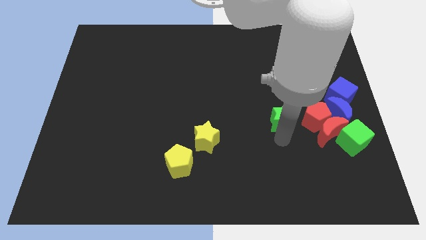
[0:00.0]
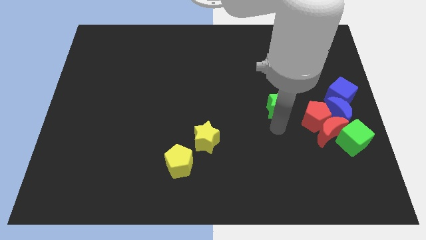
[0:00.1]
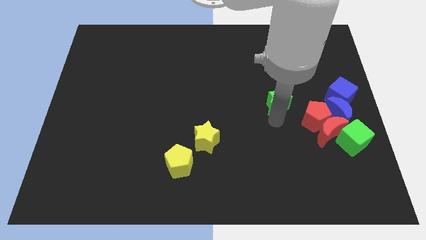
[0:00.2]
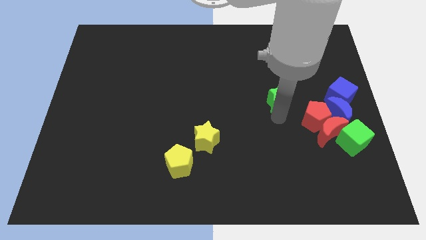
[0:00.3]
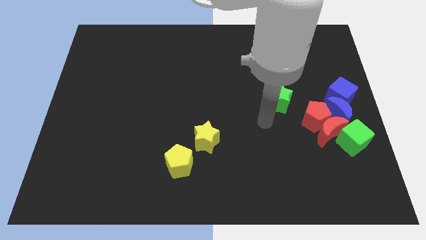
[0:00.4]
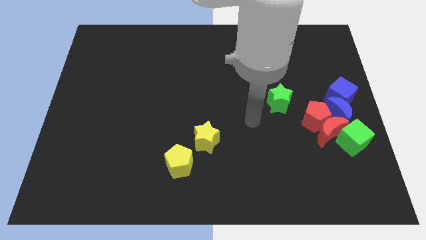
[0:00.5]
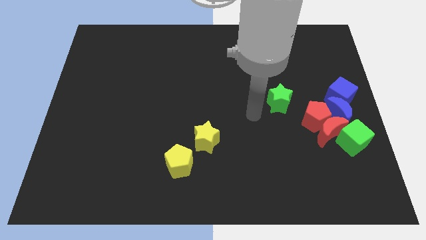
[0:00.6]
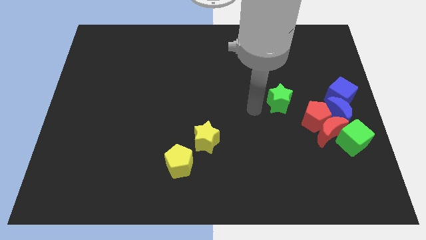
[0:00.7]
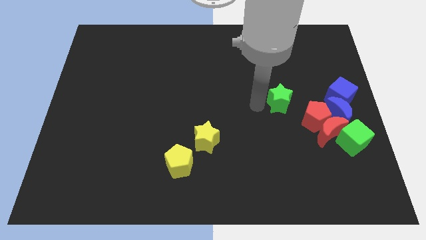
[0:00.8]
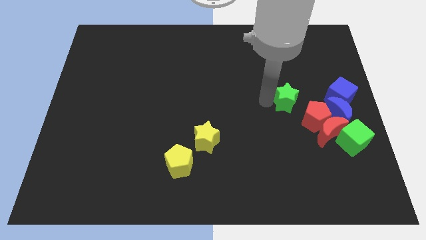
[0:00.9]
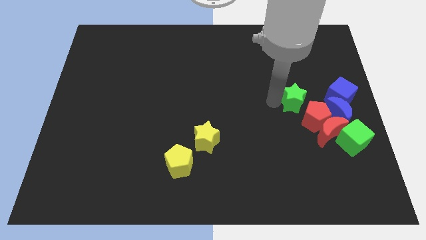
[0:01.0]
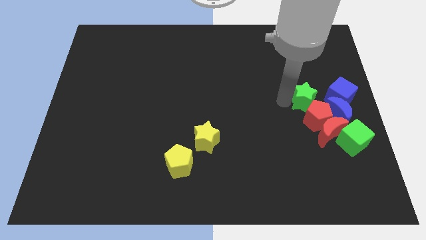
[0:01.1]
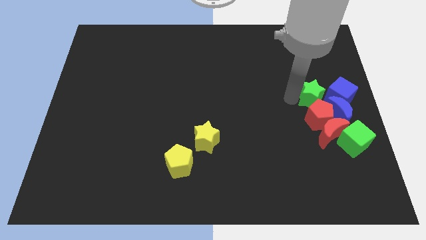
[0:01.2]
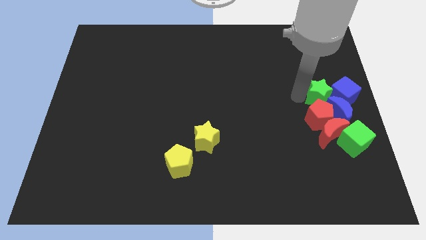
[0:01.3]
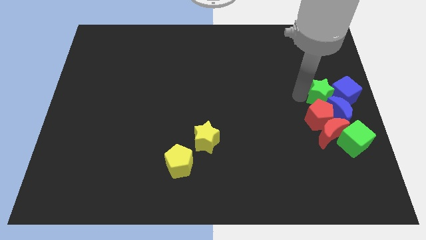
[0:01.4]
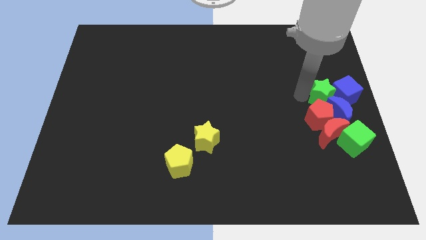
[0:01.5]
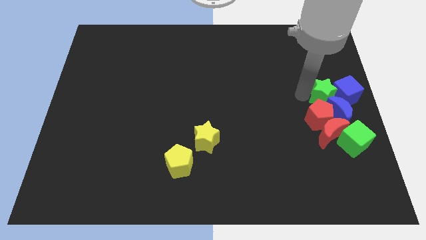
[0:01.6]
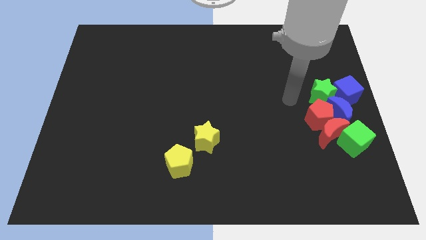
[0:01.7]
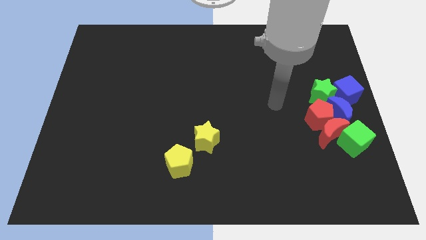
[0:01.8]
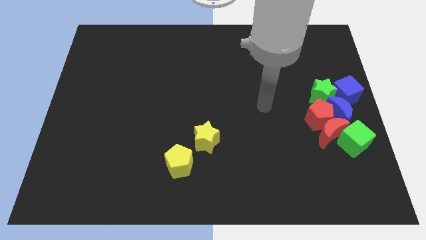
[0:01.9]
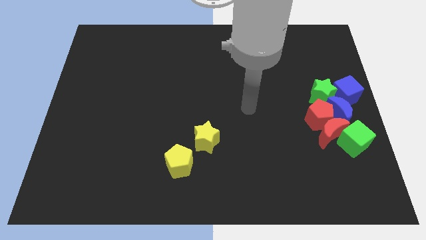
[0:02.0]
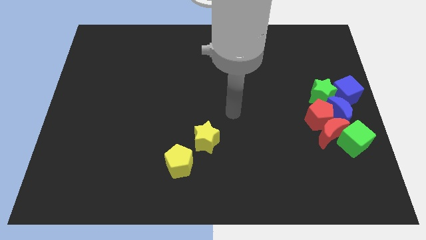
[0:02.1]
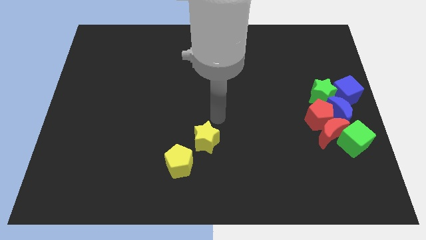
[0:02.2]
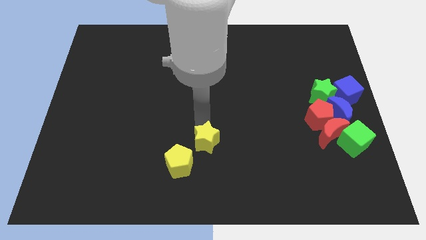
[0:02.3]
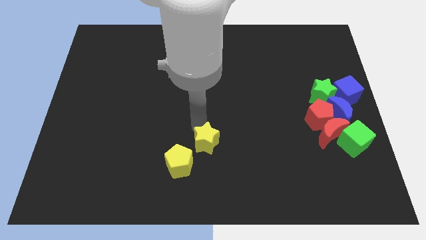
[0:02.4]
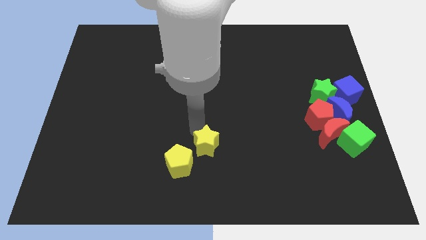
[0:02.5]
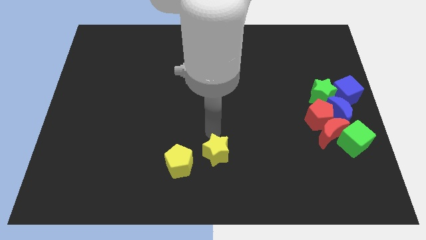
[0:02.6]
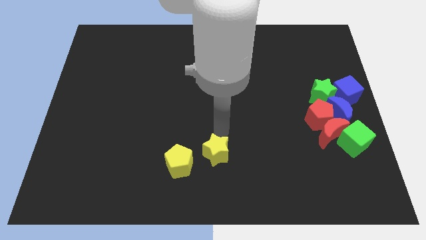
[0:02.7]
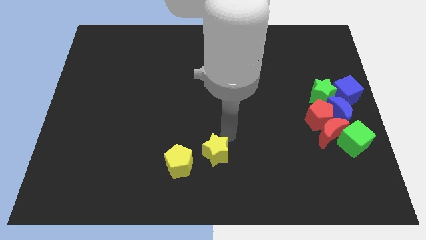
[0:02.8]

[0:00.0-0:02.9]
slide the green star into the blue cube

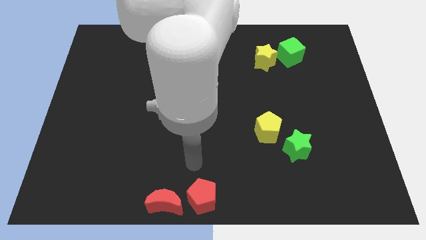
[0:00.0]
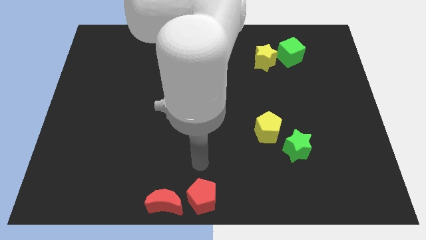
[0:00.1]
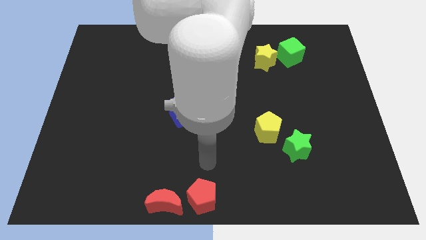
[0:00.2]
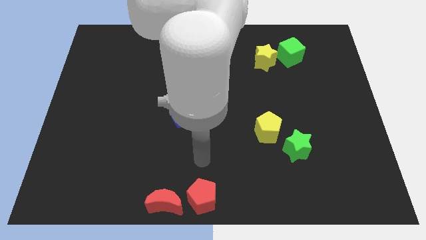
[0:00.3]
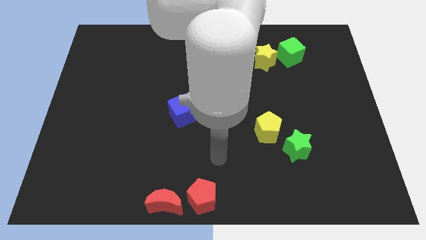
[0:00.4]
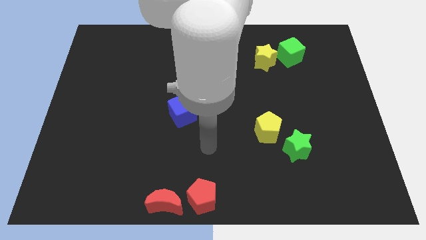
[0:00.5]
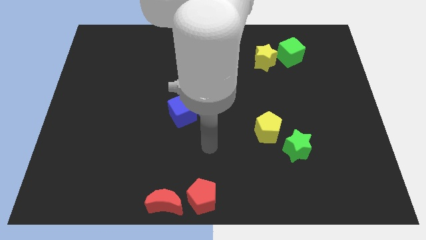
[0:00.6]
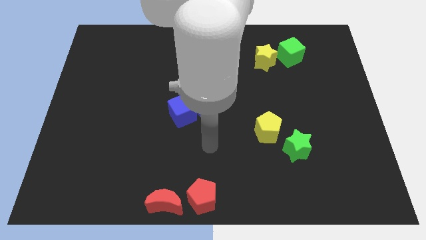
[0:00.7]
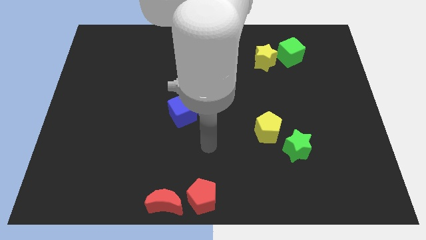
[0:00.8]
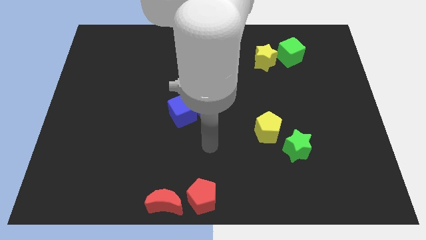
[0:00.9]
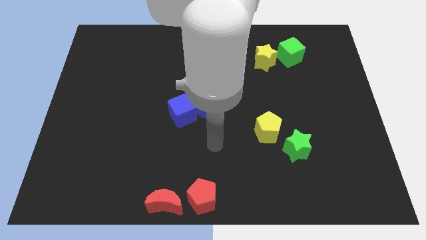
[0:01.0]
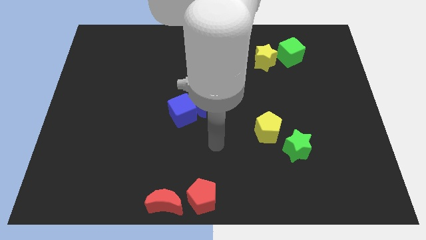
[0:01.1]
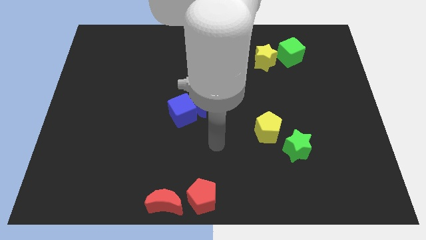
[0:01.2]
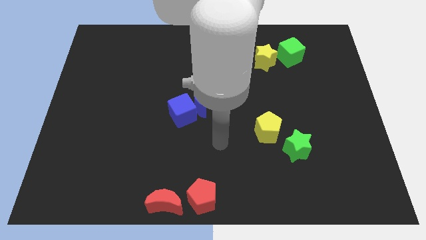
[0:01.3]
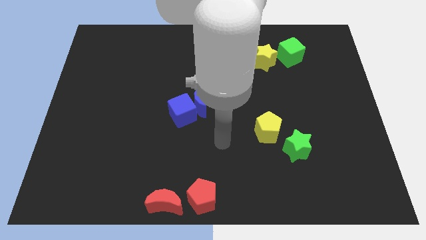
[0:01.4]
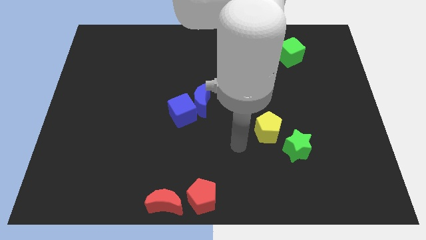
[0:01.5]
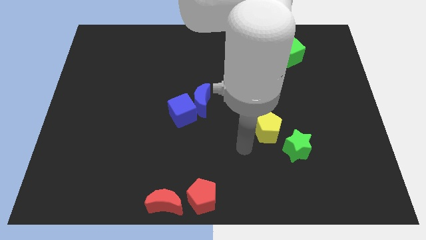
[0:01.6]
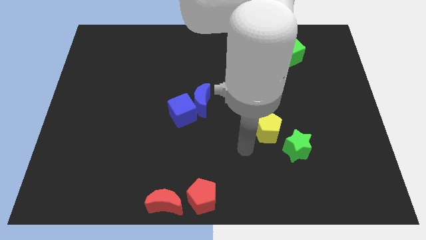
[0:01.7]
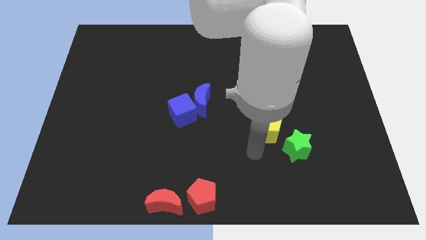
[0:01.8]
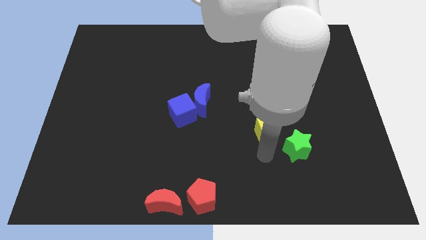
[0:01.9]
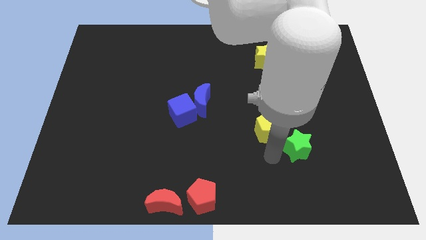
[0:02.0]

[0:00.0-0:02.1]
place your arm to the left of green star

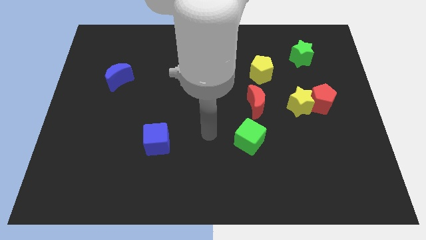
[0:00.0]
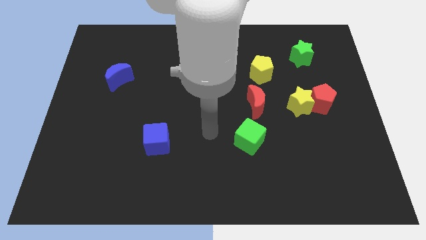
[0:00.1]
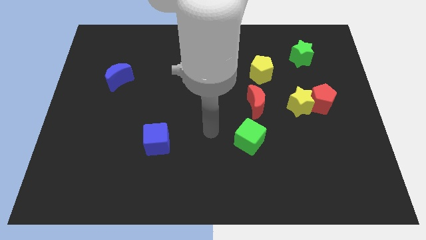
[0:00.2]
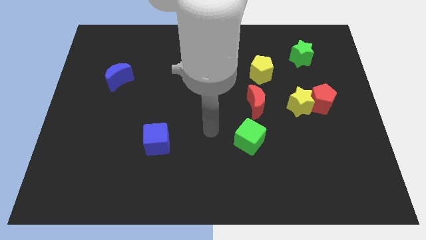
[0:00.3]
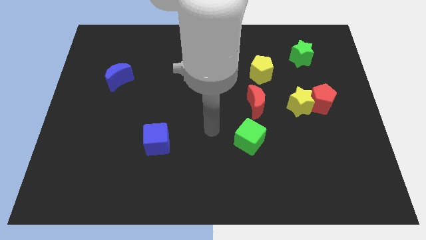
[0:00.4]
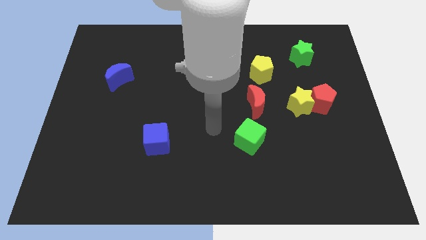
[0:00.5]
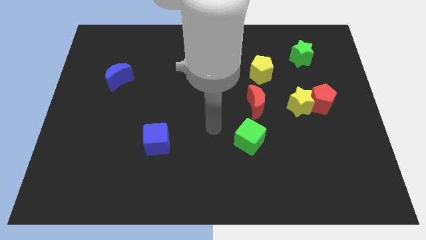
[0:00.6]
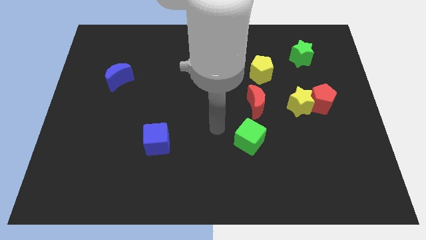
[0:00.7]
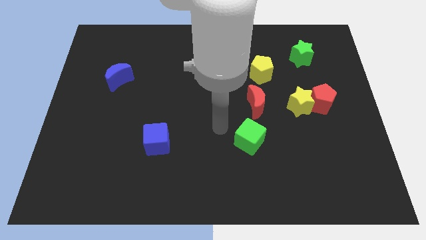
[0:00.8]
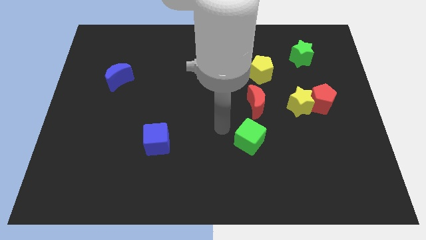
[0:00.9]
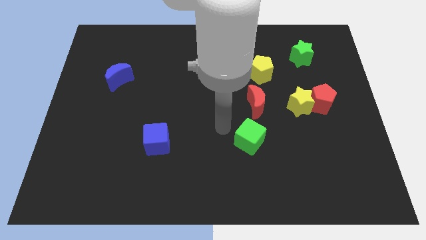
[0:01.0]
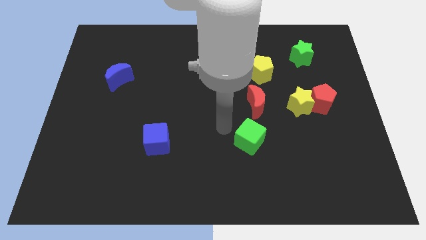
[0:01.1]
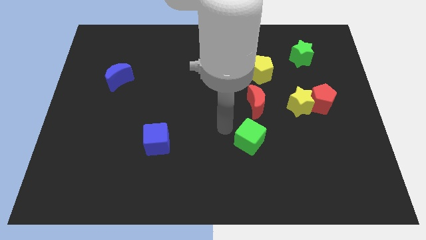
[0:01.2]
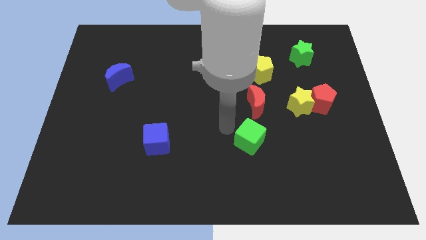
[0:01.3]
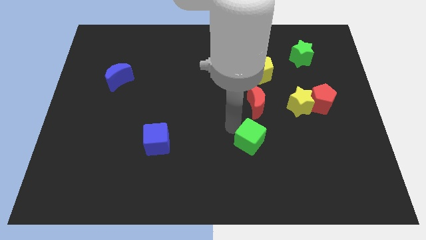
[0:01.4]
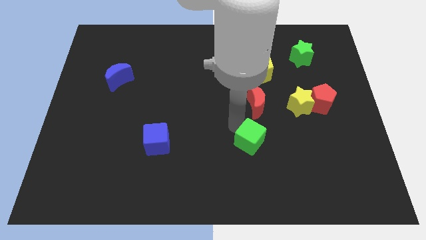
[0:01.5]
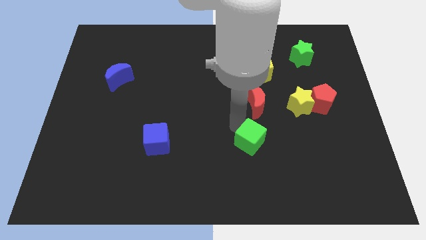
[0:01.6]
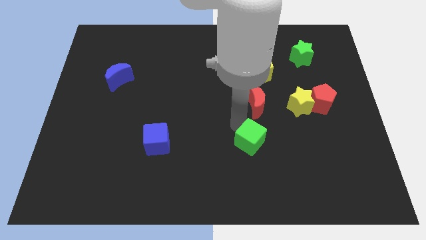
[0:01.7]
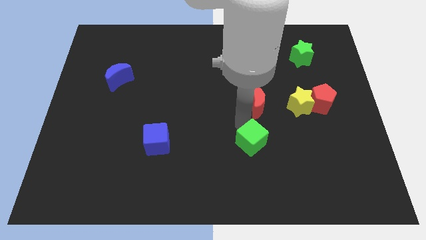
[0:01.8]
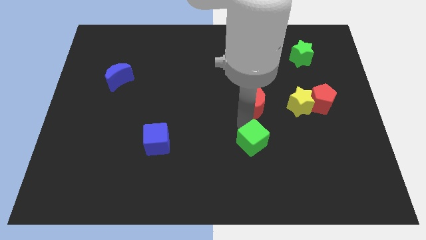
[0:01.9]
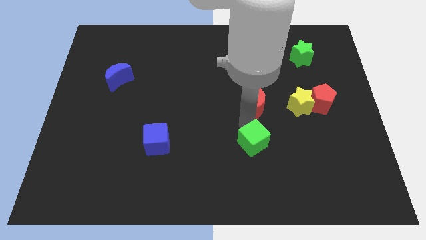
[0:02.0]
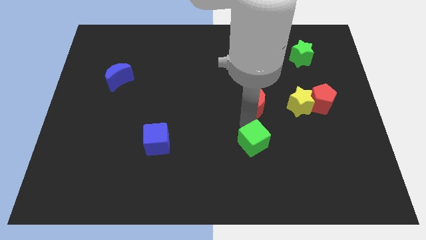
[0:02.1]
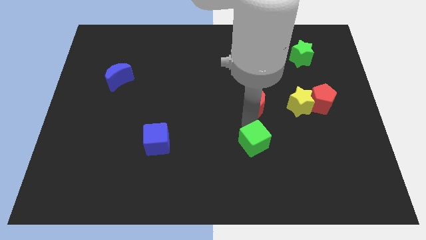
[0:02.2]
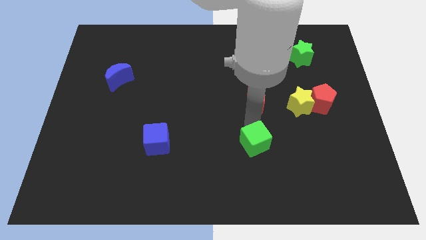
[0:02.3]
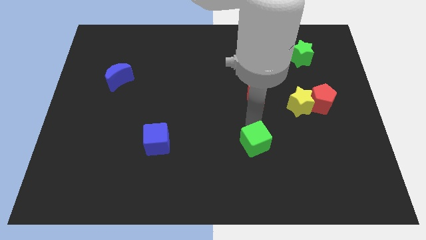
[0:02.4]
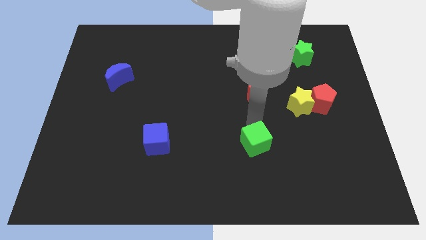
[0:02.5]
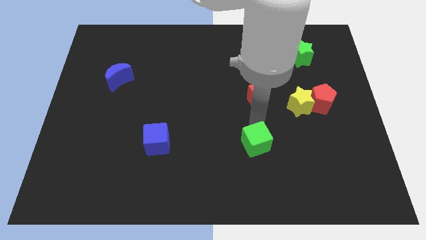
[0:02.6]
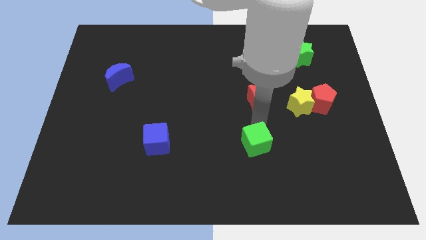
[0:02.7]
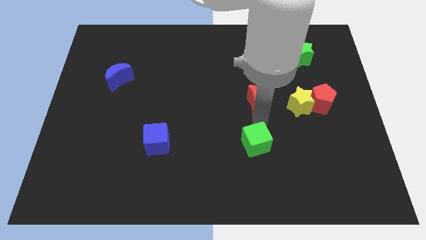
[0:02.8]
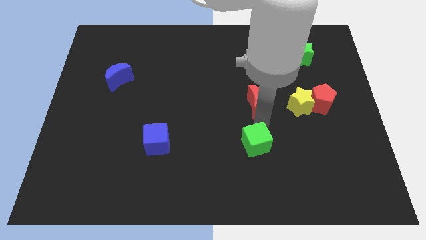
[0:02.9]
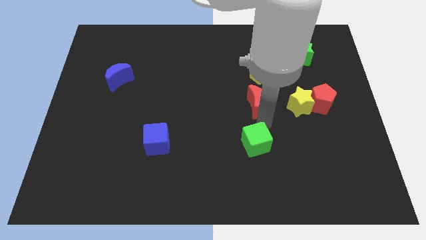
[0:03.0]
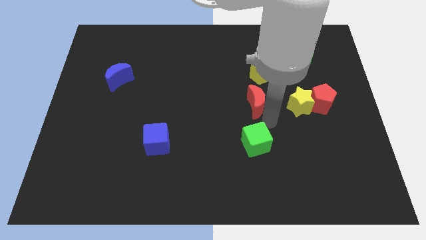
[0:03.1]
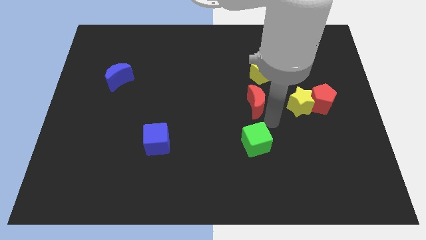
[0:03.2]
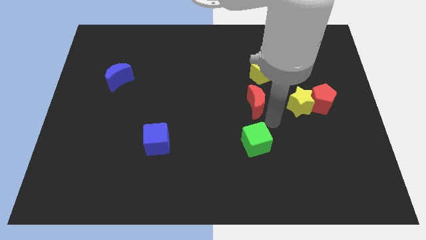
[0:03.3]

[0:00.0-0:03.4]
touch the top side of the green cube

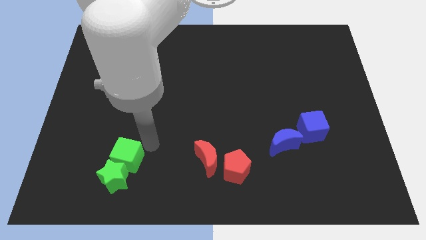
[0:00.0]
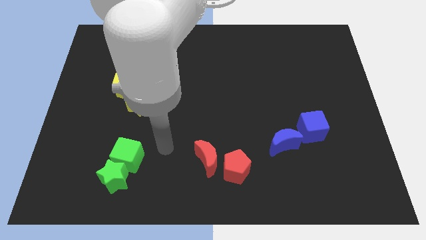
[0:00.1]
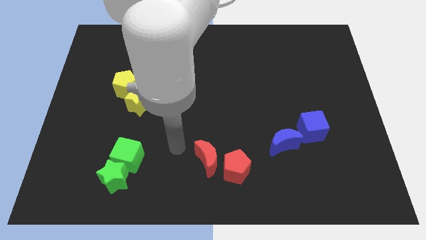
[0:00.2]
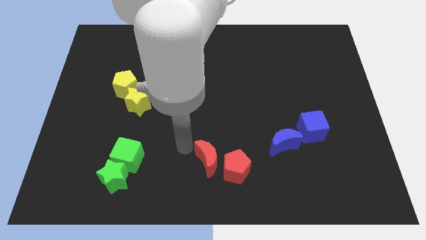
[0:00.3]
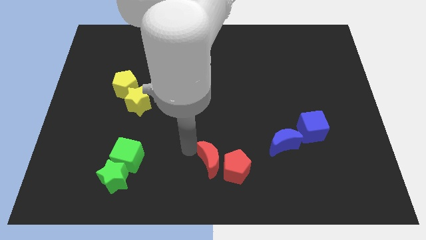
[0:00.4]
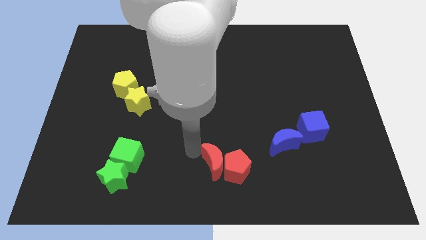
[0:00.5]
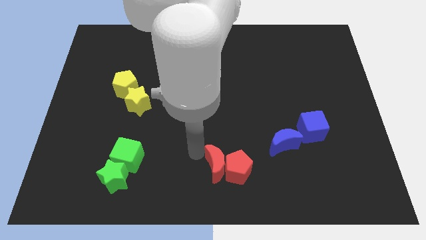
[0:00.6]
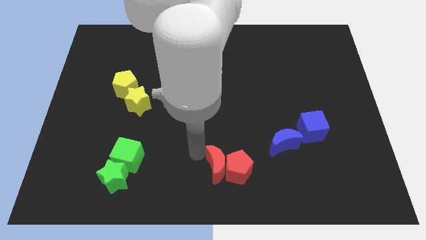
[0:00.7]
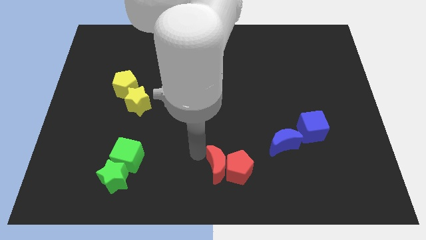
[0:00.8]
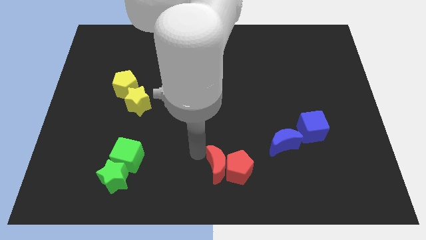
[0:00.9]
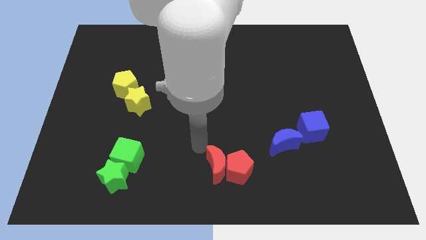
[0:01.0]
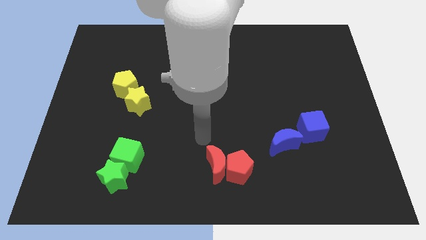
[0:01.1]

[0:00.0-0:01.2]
slide the red moon into the red pentagon
